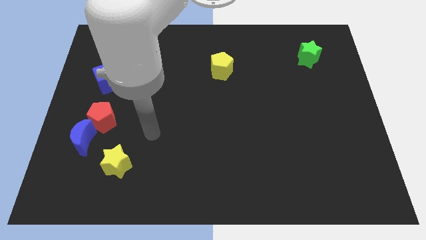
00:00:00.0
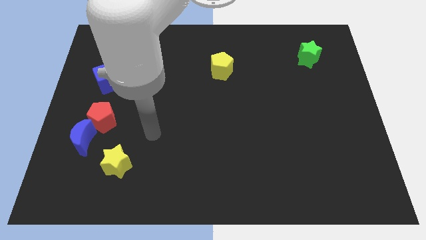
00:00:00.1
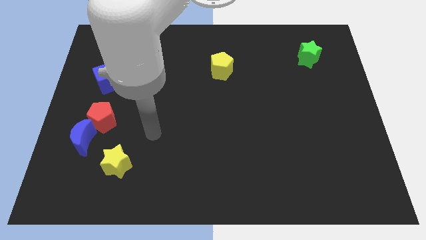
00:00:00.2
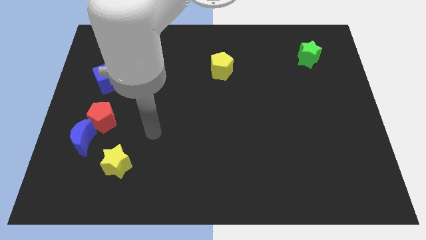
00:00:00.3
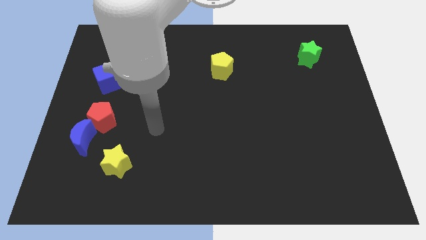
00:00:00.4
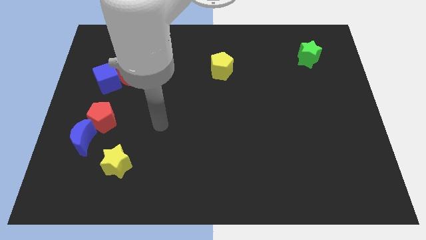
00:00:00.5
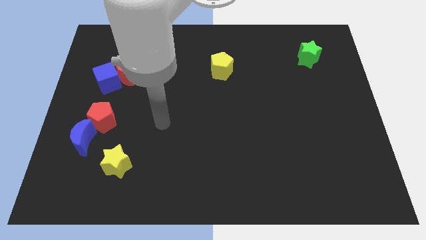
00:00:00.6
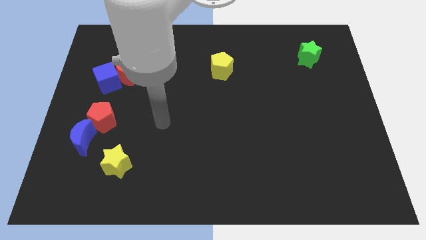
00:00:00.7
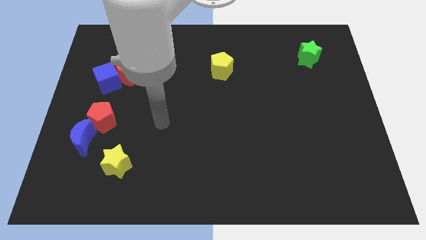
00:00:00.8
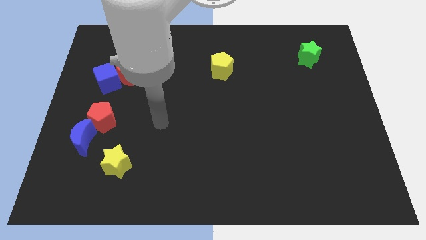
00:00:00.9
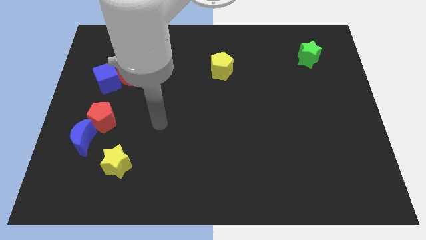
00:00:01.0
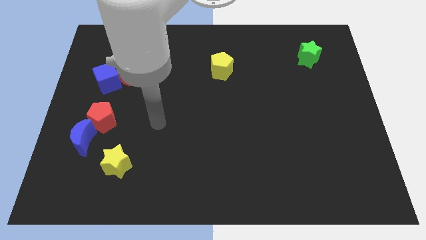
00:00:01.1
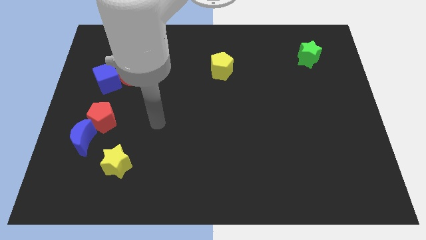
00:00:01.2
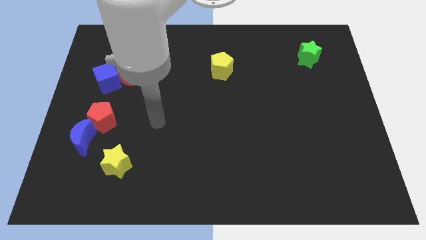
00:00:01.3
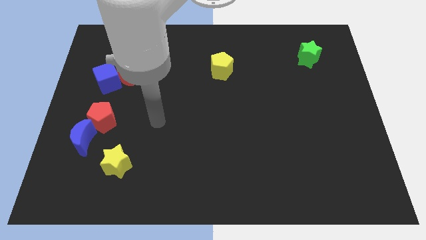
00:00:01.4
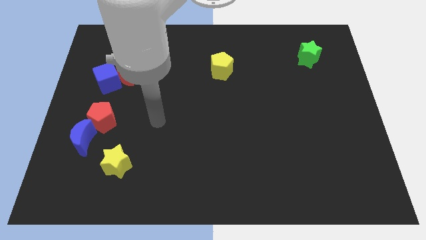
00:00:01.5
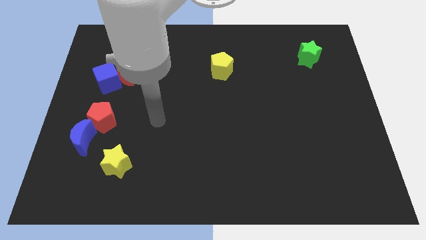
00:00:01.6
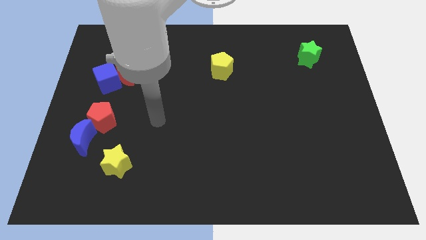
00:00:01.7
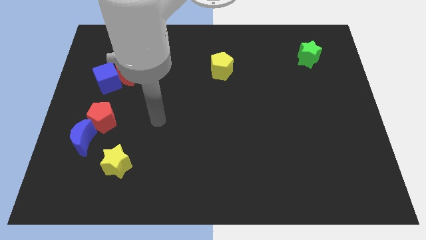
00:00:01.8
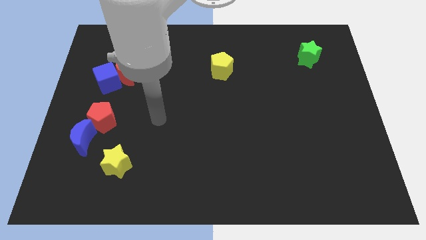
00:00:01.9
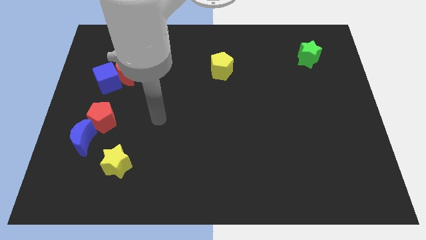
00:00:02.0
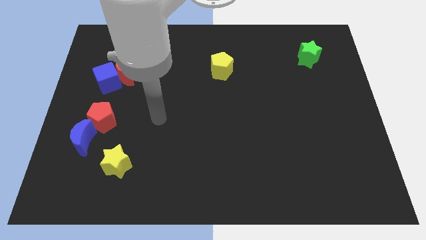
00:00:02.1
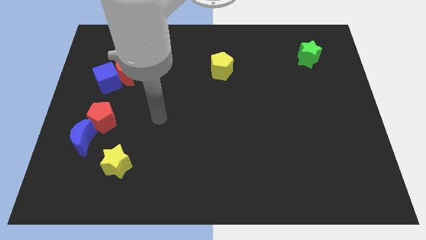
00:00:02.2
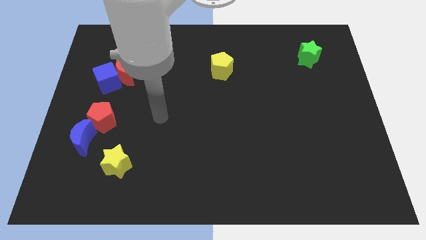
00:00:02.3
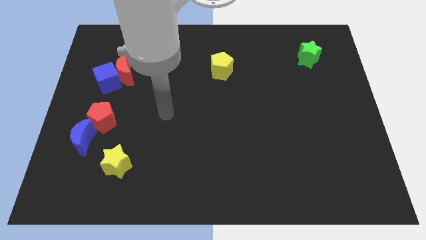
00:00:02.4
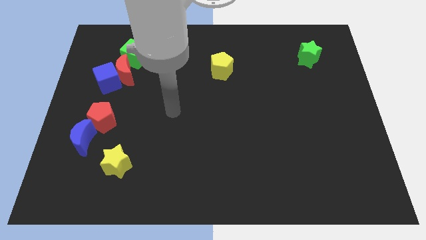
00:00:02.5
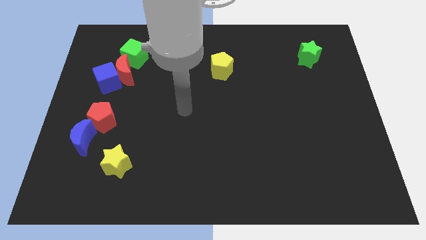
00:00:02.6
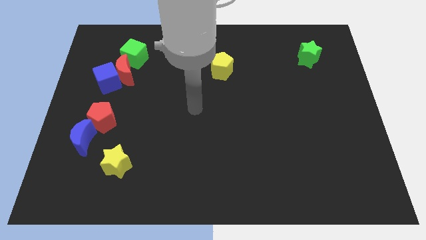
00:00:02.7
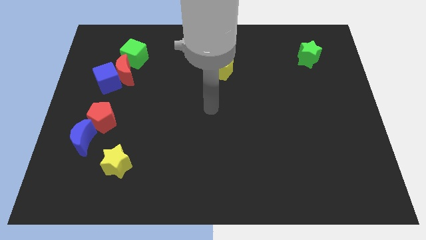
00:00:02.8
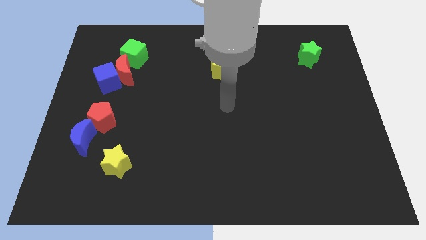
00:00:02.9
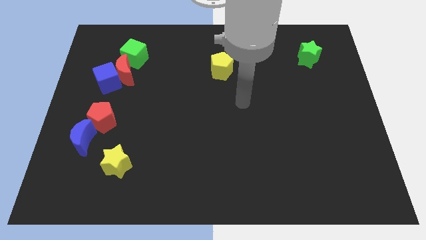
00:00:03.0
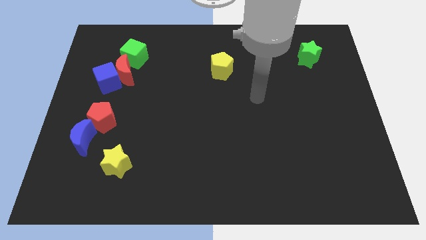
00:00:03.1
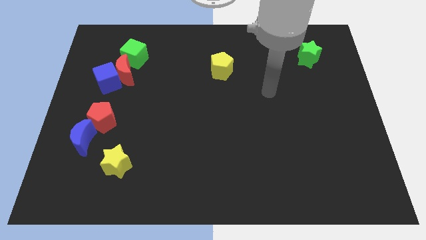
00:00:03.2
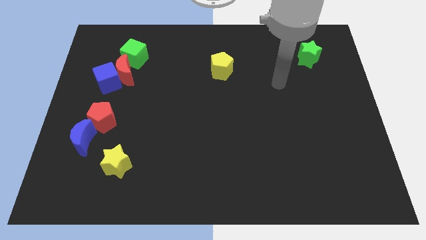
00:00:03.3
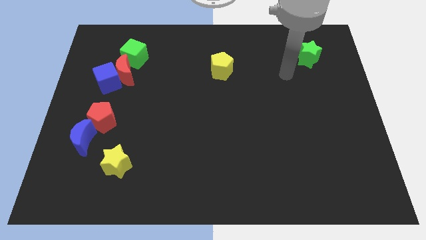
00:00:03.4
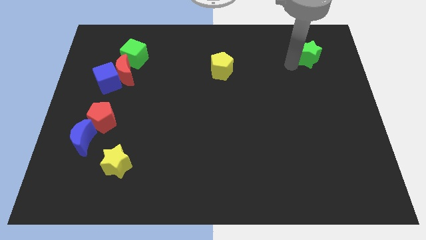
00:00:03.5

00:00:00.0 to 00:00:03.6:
move your arm towards the green star

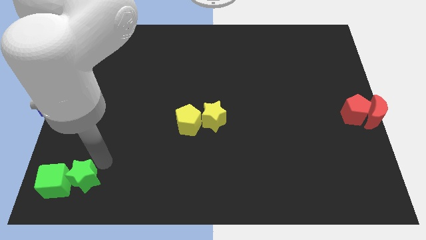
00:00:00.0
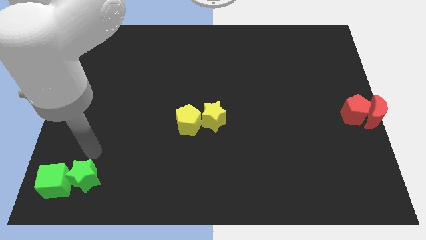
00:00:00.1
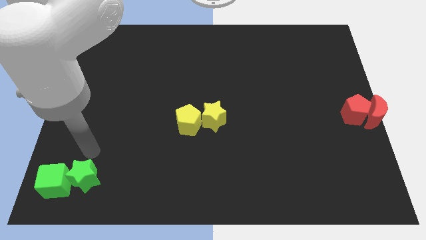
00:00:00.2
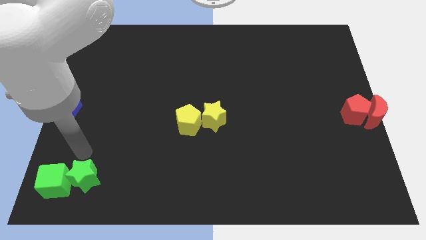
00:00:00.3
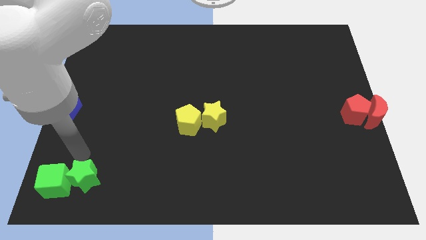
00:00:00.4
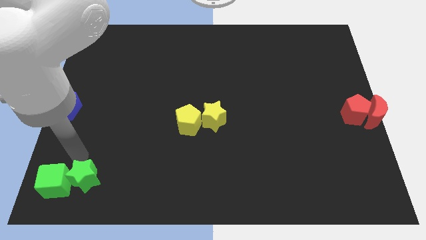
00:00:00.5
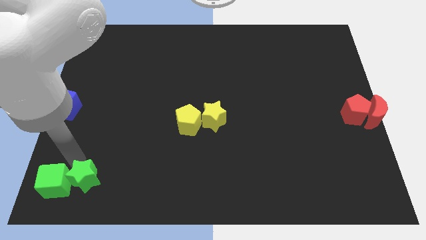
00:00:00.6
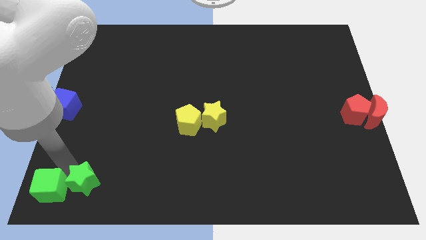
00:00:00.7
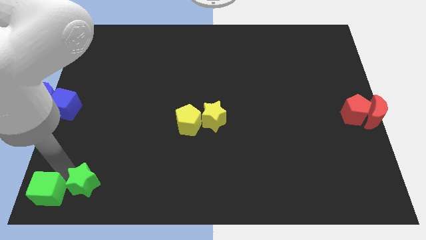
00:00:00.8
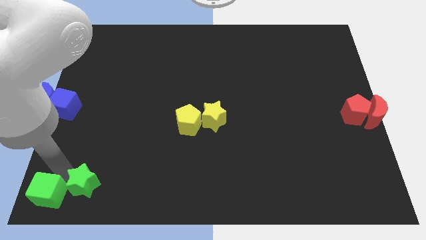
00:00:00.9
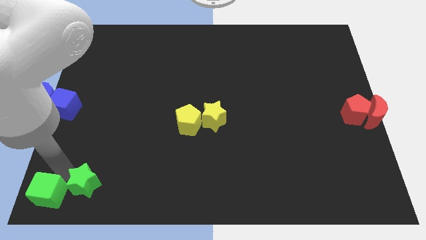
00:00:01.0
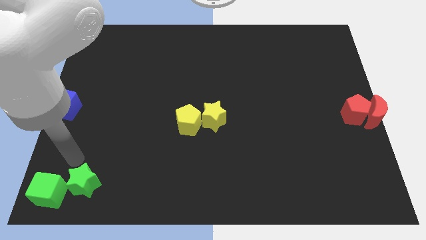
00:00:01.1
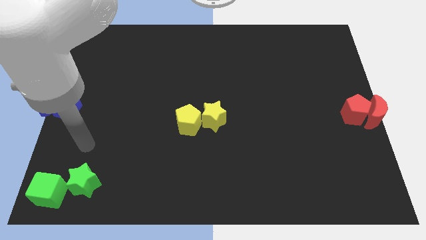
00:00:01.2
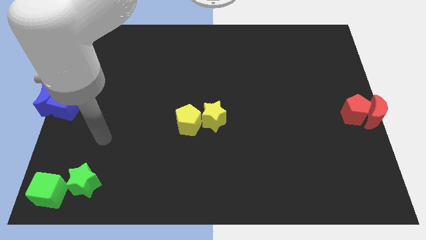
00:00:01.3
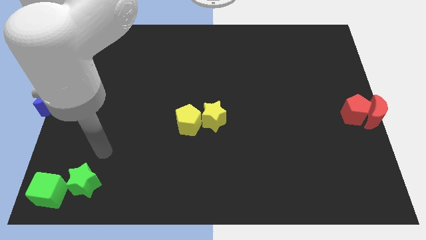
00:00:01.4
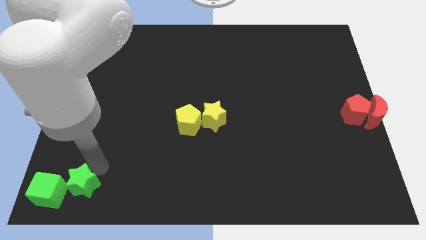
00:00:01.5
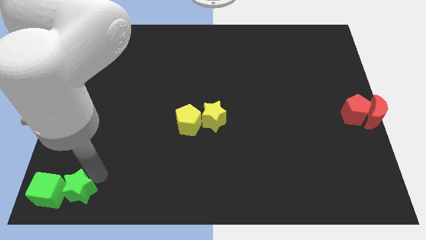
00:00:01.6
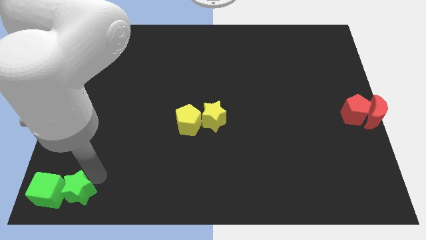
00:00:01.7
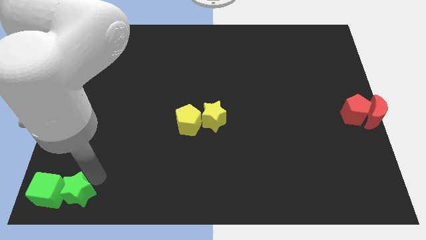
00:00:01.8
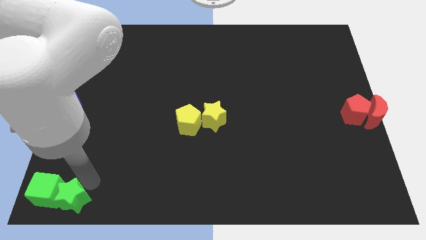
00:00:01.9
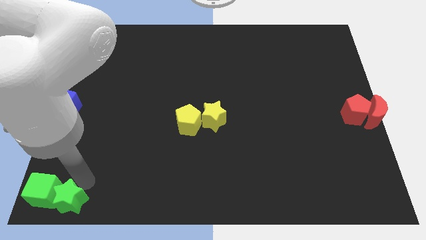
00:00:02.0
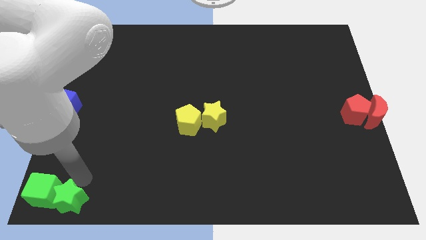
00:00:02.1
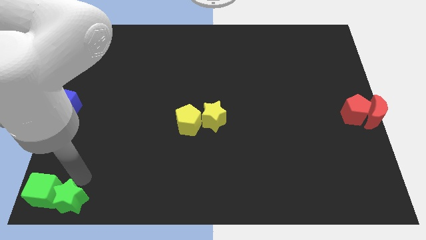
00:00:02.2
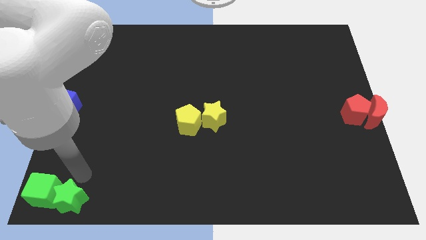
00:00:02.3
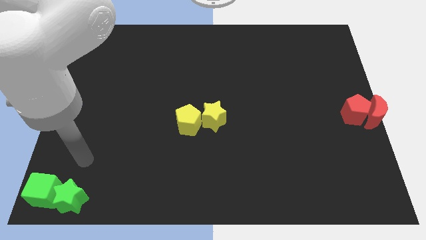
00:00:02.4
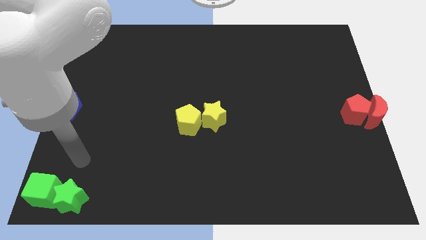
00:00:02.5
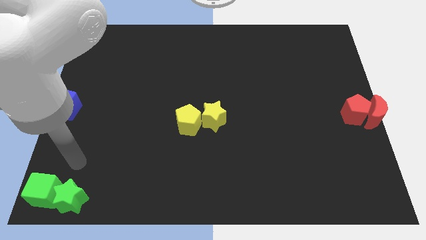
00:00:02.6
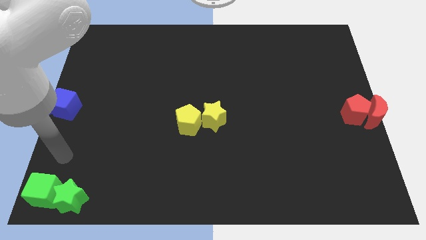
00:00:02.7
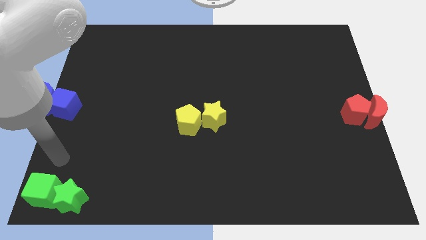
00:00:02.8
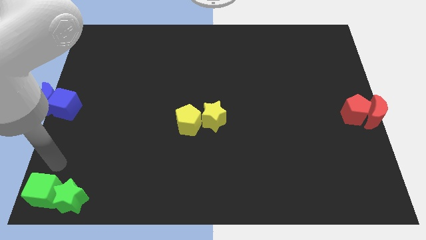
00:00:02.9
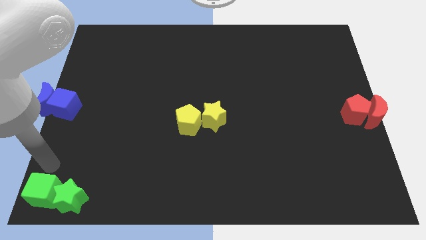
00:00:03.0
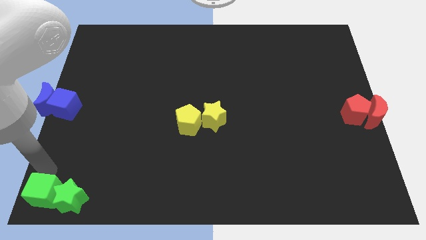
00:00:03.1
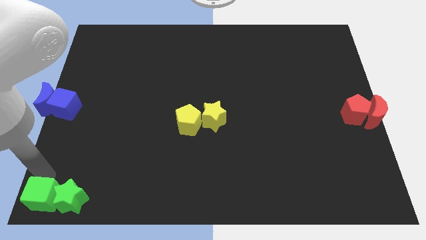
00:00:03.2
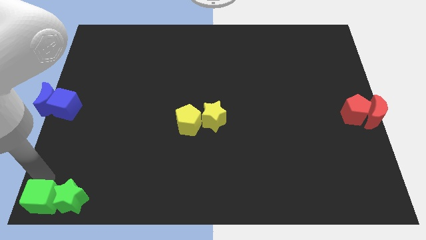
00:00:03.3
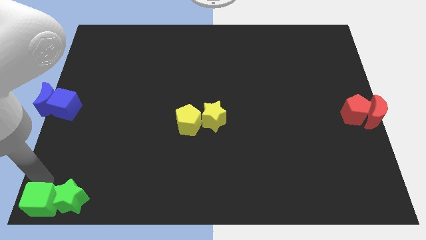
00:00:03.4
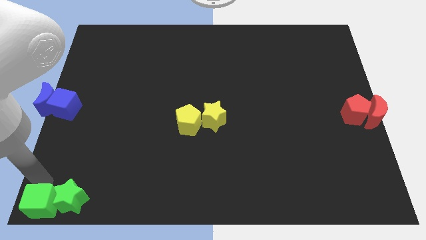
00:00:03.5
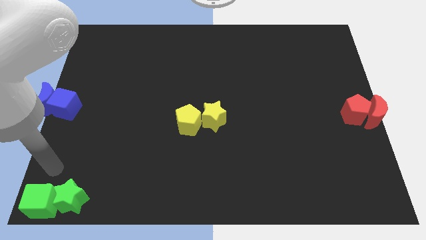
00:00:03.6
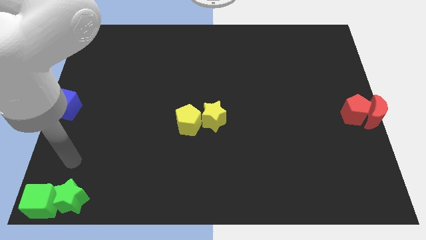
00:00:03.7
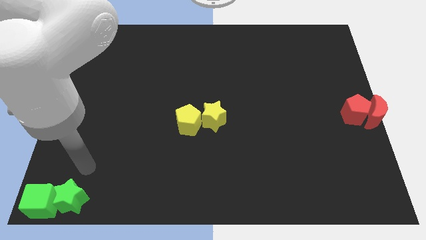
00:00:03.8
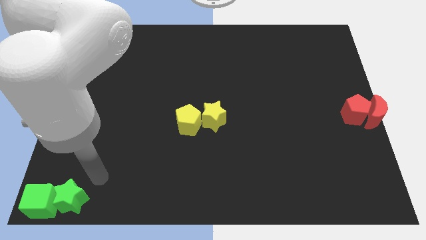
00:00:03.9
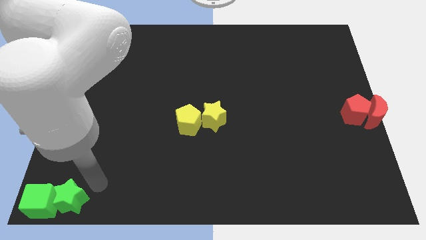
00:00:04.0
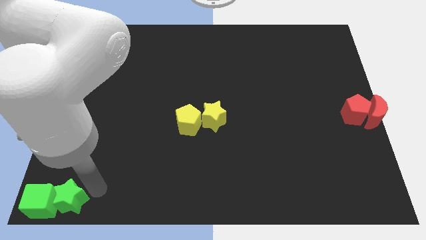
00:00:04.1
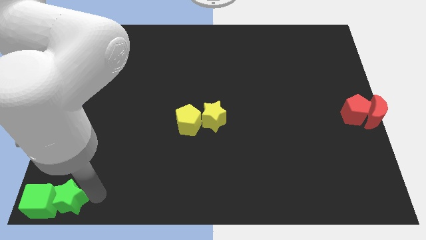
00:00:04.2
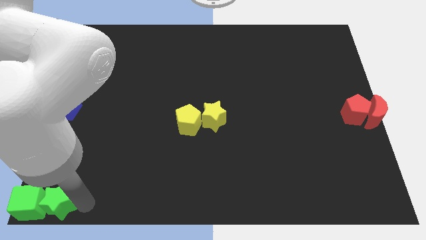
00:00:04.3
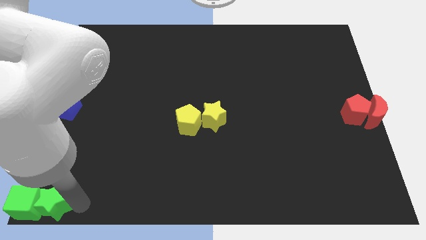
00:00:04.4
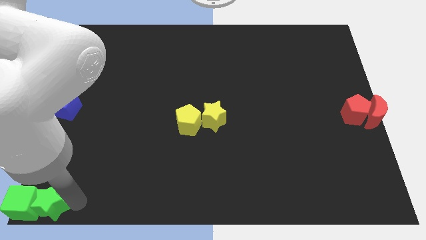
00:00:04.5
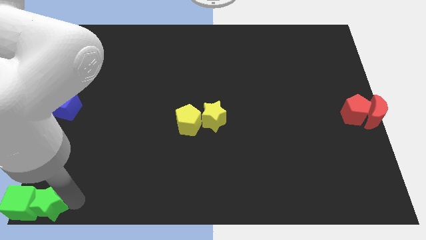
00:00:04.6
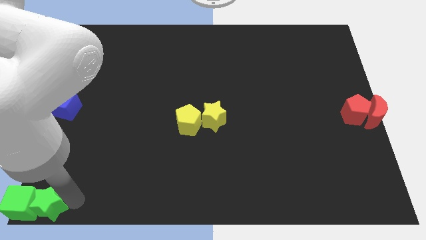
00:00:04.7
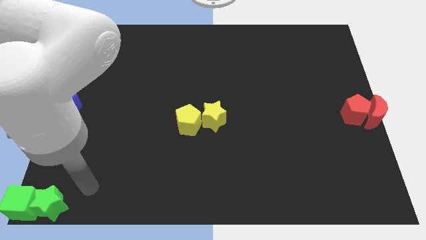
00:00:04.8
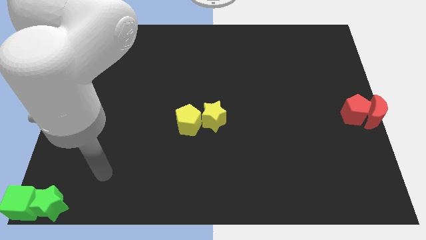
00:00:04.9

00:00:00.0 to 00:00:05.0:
push the green blocks to the bottom left corner

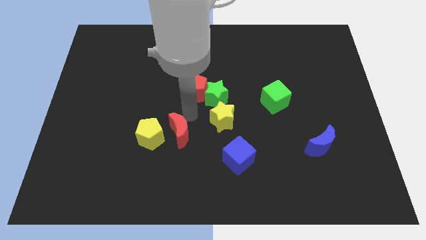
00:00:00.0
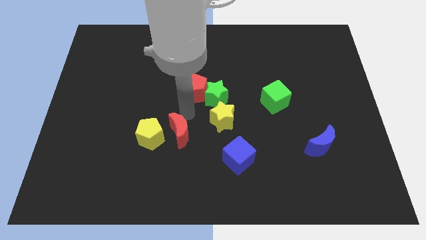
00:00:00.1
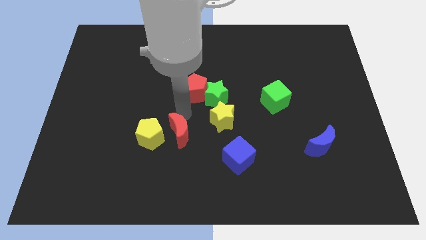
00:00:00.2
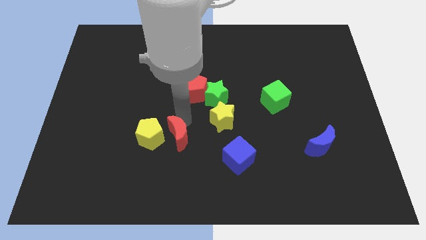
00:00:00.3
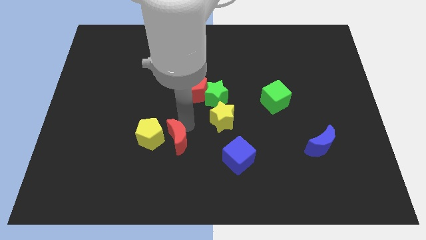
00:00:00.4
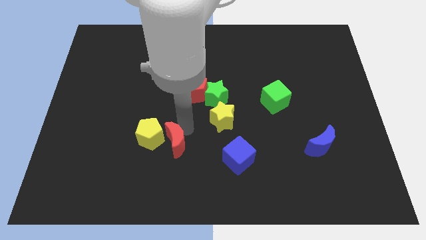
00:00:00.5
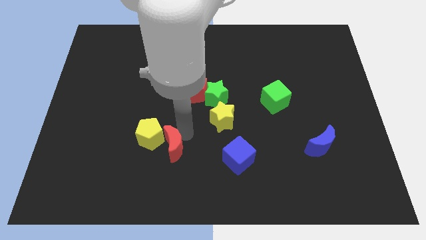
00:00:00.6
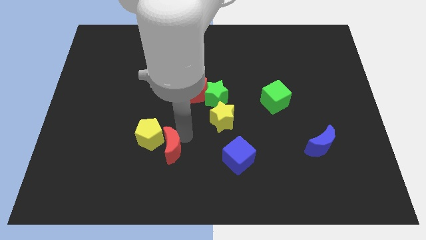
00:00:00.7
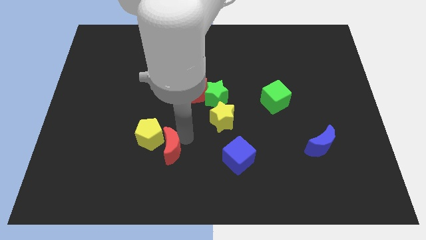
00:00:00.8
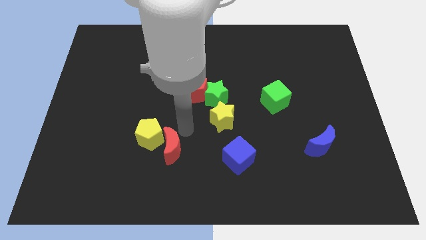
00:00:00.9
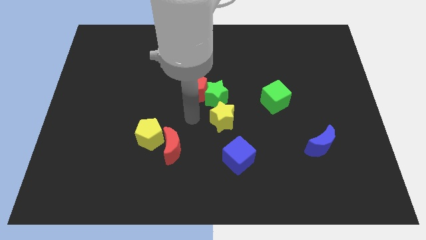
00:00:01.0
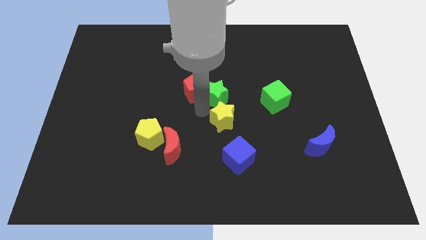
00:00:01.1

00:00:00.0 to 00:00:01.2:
push red crescent in to yellow pentagon
